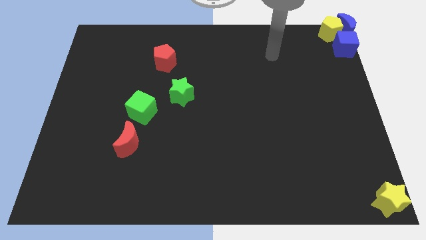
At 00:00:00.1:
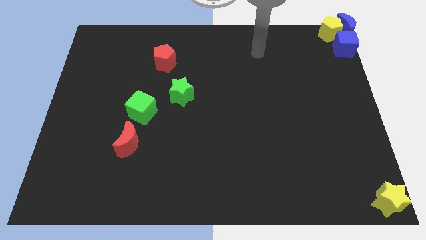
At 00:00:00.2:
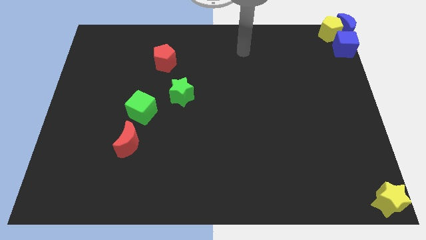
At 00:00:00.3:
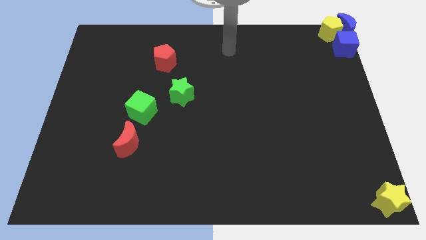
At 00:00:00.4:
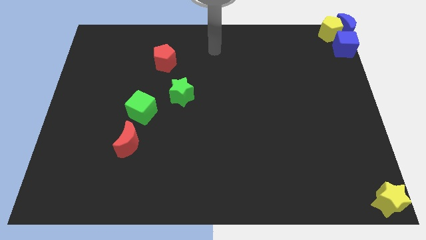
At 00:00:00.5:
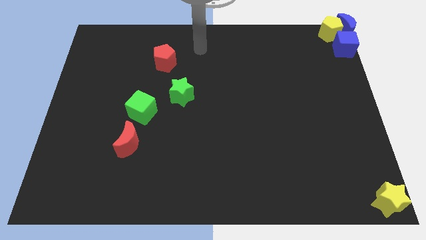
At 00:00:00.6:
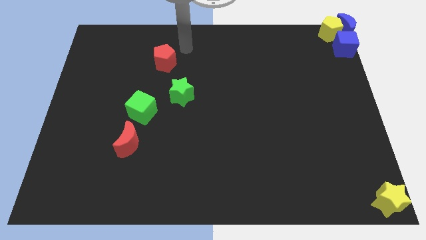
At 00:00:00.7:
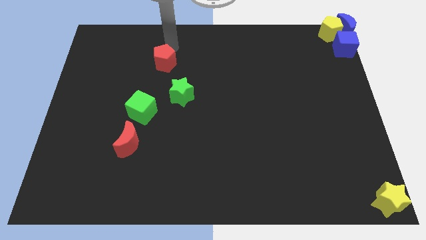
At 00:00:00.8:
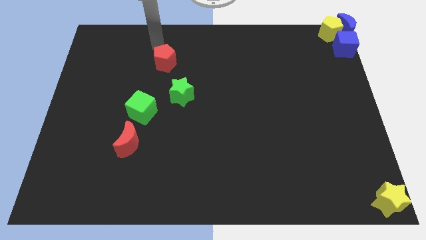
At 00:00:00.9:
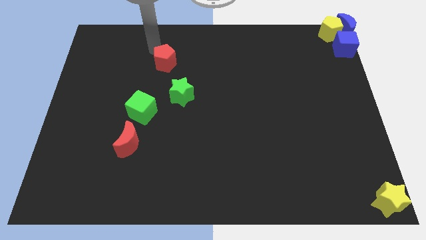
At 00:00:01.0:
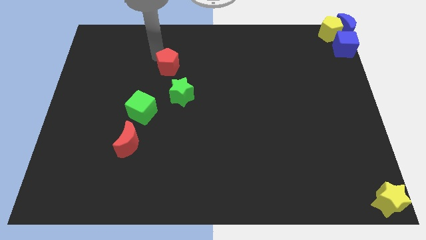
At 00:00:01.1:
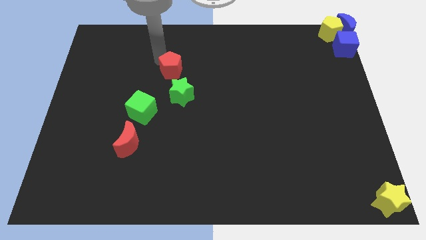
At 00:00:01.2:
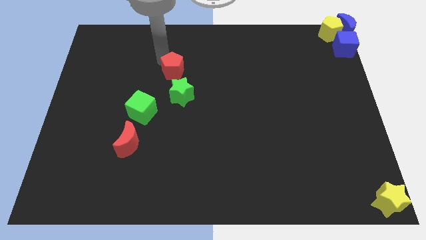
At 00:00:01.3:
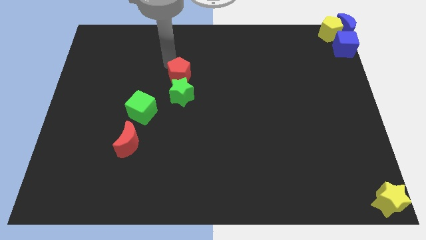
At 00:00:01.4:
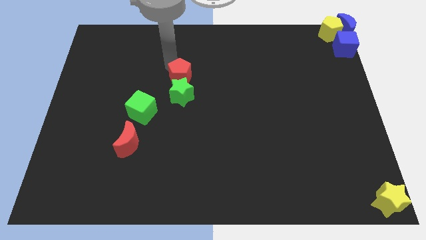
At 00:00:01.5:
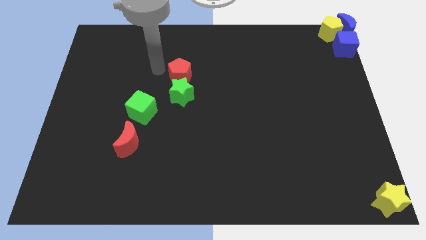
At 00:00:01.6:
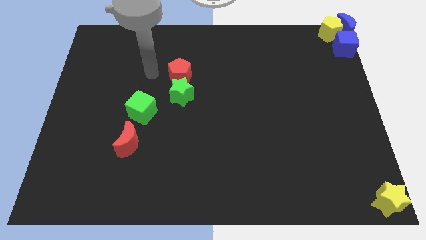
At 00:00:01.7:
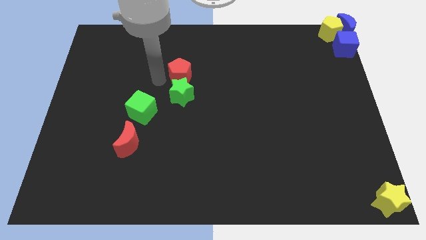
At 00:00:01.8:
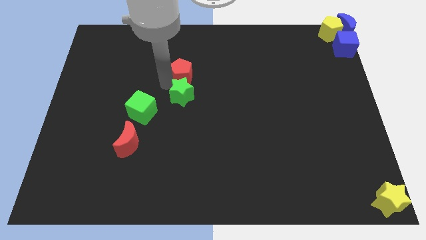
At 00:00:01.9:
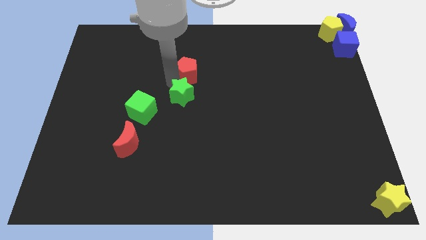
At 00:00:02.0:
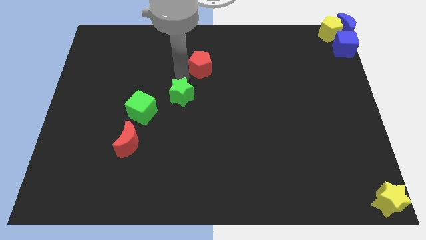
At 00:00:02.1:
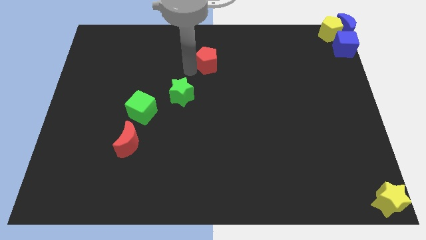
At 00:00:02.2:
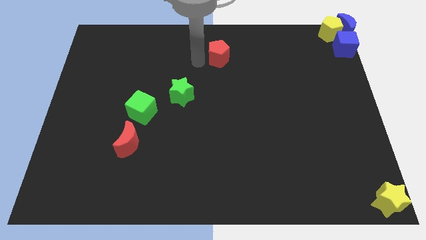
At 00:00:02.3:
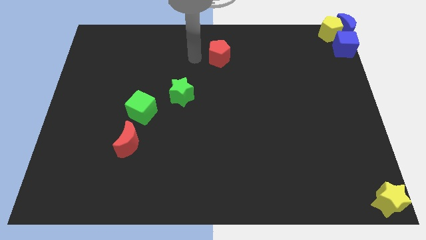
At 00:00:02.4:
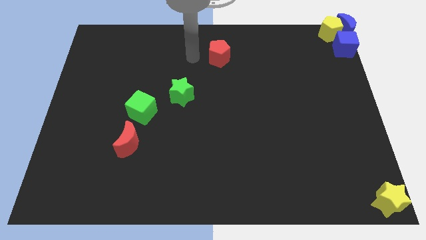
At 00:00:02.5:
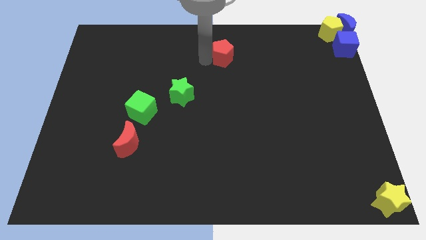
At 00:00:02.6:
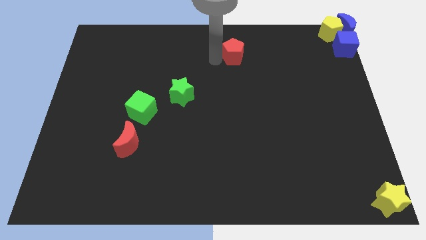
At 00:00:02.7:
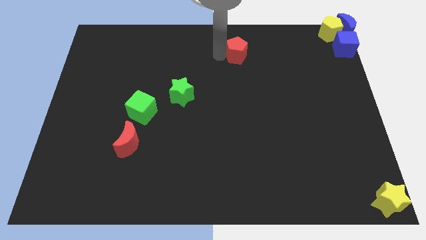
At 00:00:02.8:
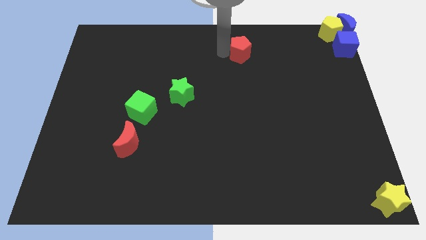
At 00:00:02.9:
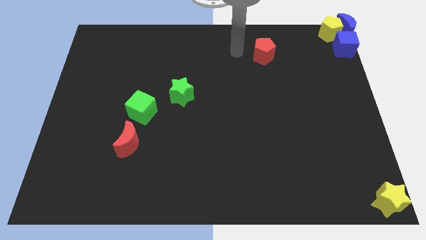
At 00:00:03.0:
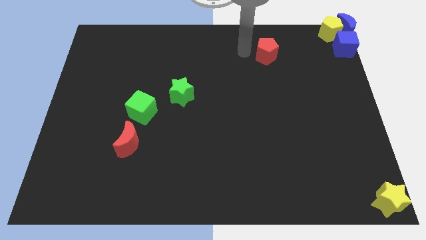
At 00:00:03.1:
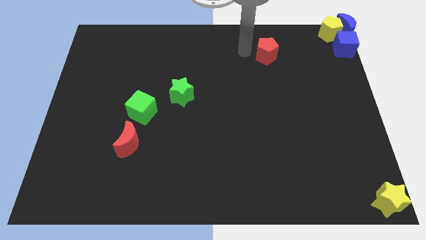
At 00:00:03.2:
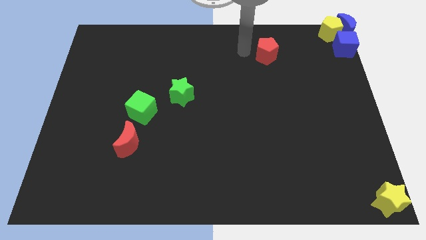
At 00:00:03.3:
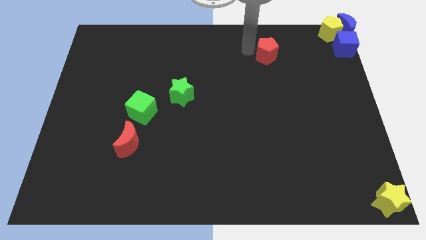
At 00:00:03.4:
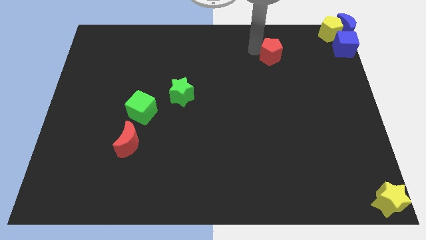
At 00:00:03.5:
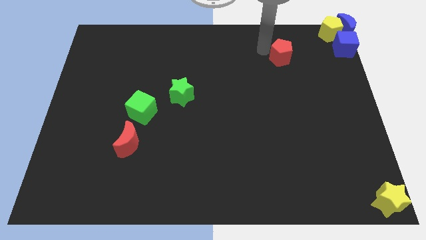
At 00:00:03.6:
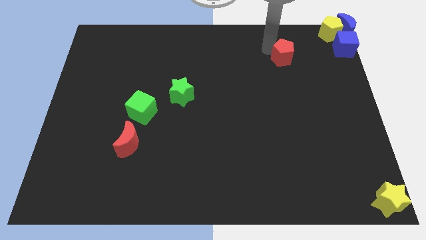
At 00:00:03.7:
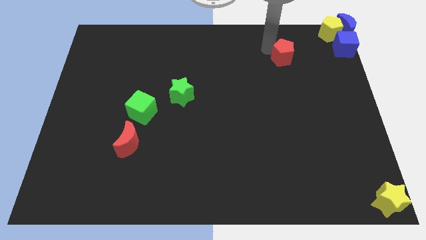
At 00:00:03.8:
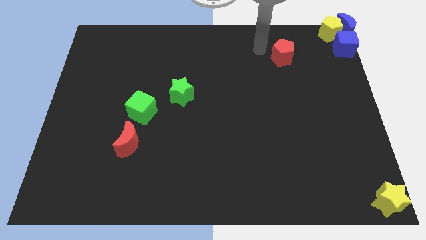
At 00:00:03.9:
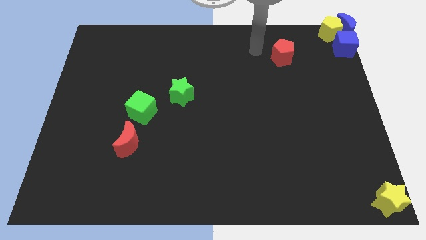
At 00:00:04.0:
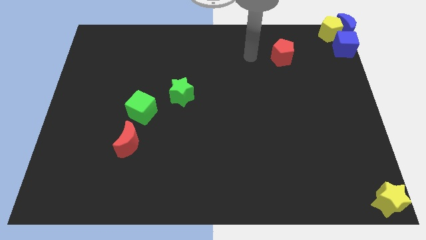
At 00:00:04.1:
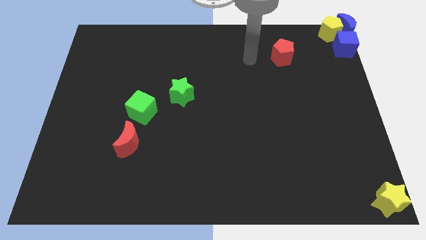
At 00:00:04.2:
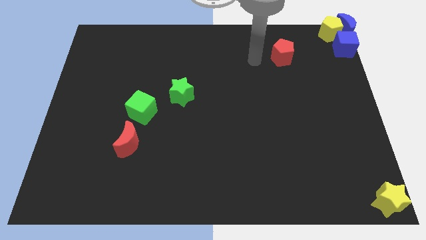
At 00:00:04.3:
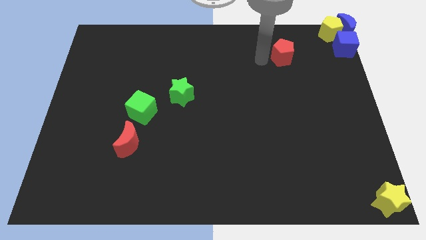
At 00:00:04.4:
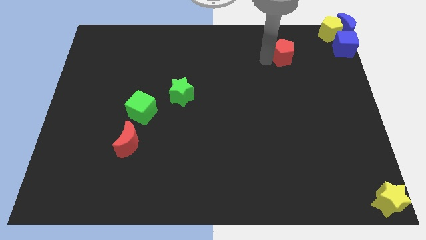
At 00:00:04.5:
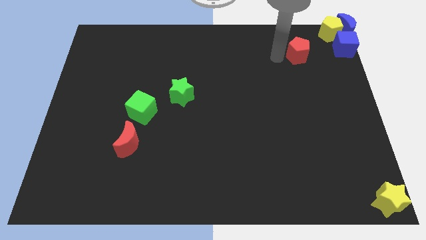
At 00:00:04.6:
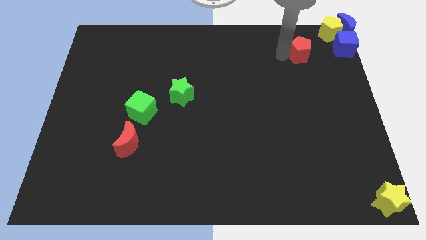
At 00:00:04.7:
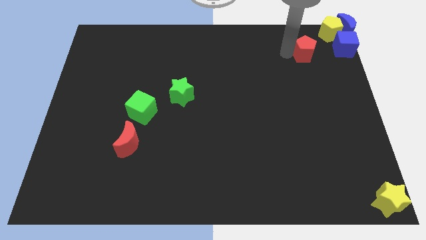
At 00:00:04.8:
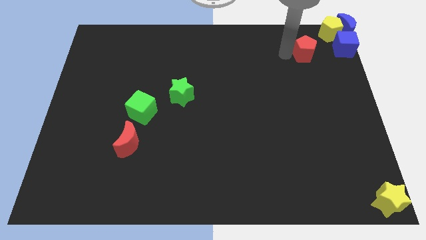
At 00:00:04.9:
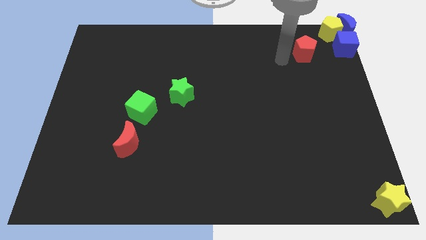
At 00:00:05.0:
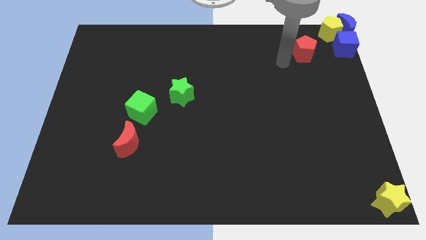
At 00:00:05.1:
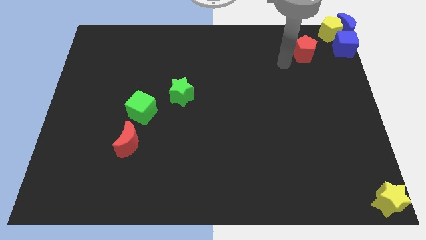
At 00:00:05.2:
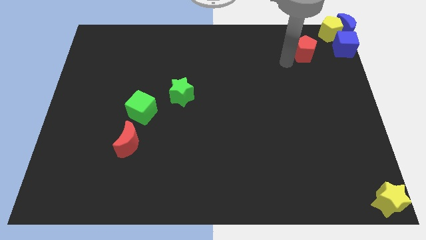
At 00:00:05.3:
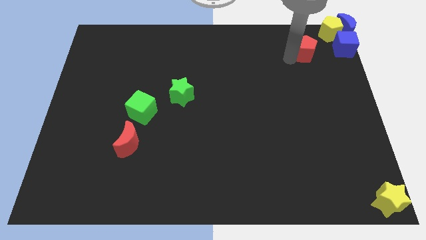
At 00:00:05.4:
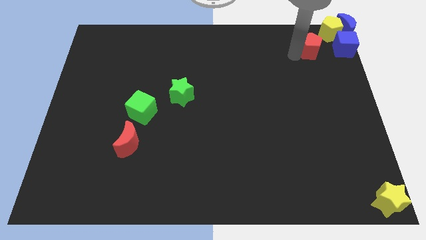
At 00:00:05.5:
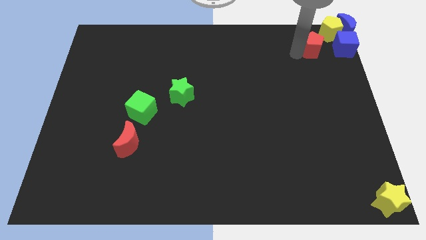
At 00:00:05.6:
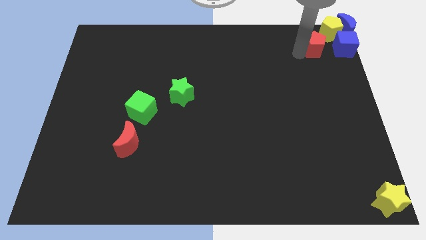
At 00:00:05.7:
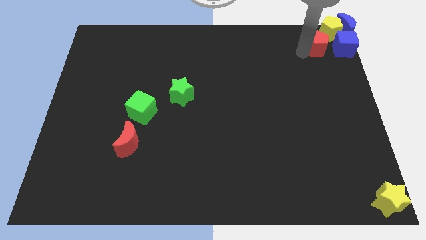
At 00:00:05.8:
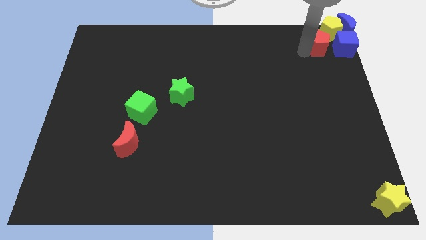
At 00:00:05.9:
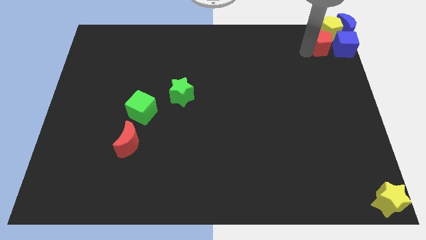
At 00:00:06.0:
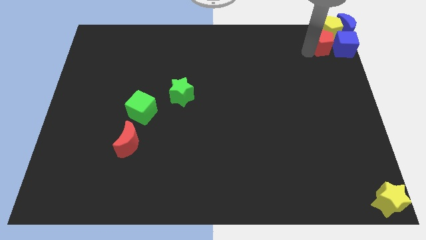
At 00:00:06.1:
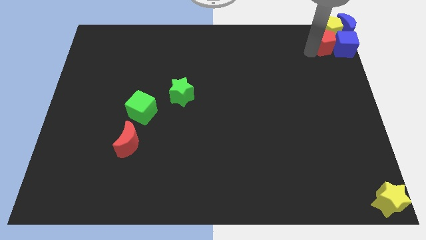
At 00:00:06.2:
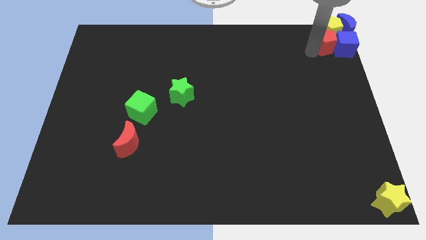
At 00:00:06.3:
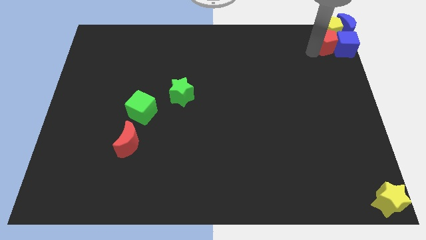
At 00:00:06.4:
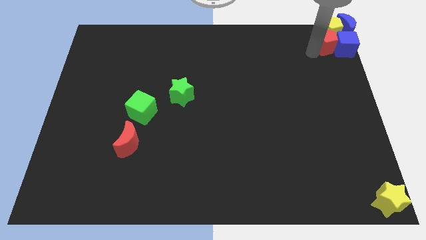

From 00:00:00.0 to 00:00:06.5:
push the red pentagon into the blue cube

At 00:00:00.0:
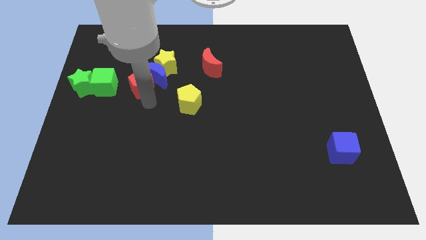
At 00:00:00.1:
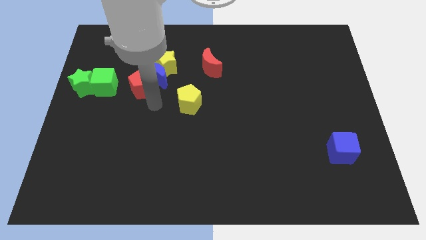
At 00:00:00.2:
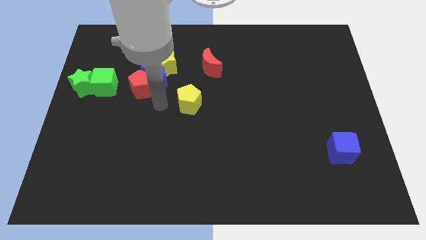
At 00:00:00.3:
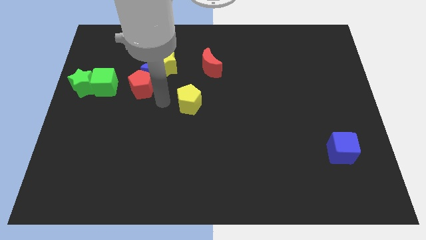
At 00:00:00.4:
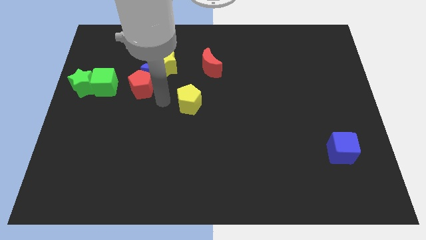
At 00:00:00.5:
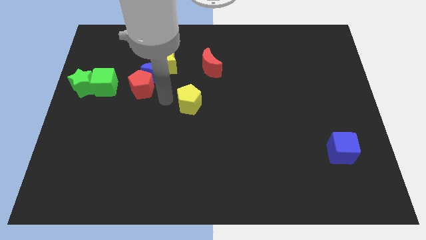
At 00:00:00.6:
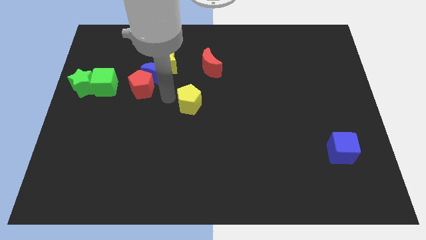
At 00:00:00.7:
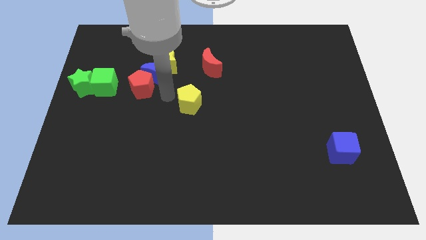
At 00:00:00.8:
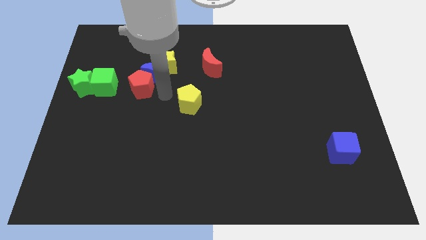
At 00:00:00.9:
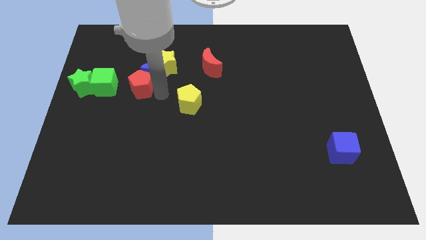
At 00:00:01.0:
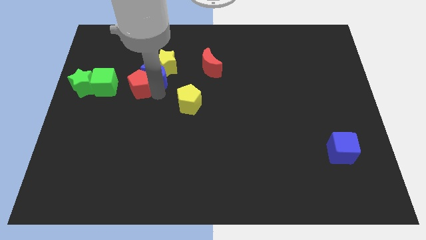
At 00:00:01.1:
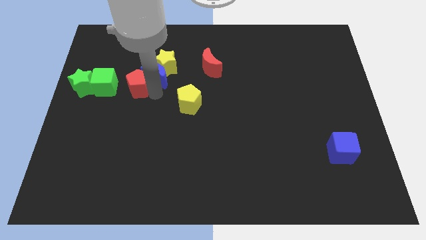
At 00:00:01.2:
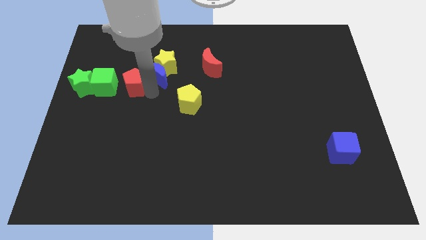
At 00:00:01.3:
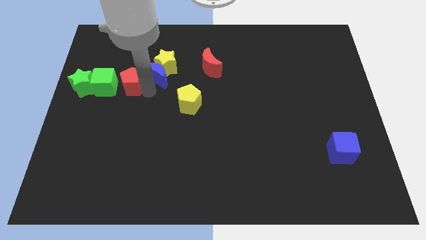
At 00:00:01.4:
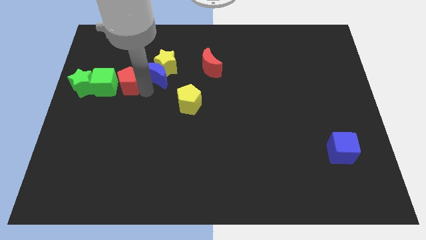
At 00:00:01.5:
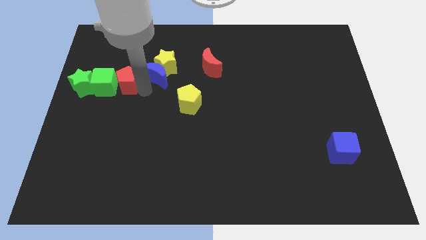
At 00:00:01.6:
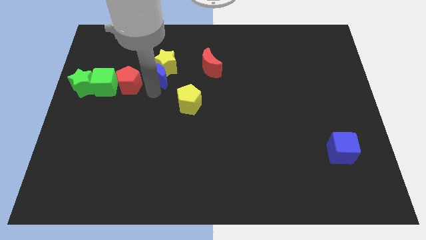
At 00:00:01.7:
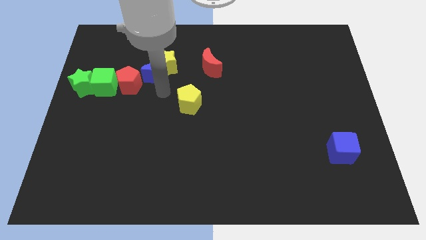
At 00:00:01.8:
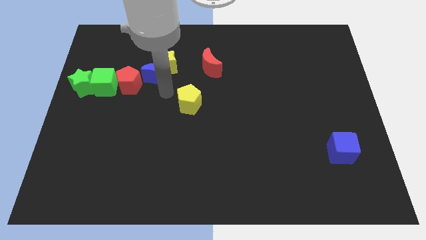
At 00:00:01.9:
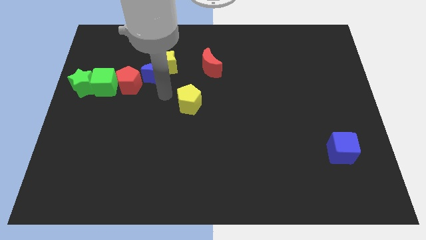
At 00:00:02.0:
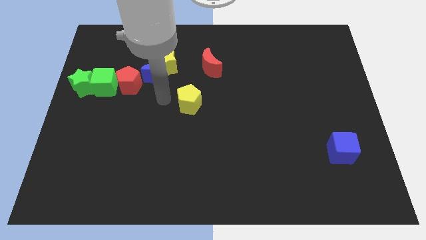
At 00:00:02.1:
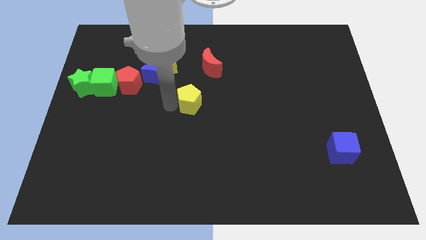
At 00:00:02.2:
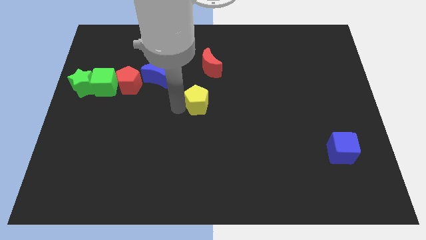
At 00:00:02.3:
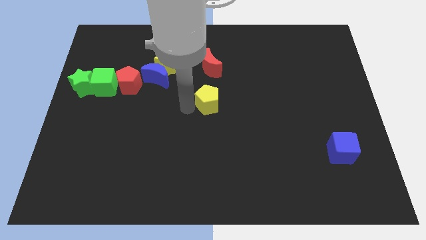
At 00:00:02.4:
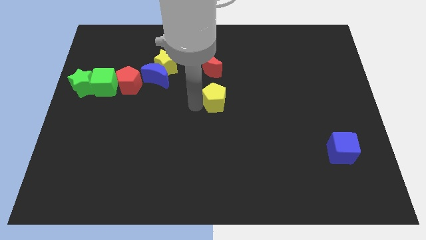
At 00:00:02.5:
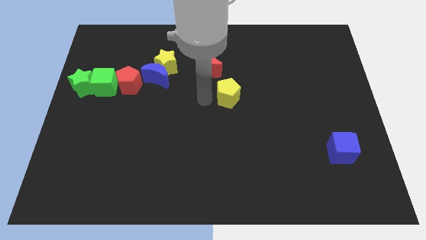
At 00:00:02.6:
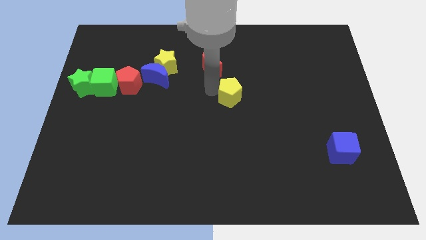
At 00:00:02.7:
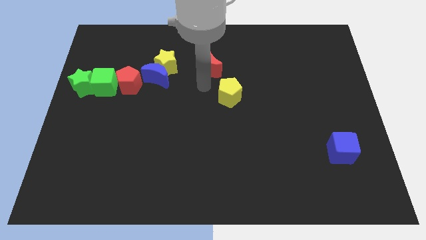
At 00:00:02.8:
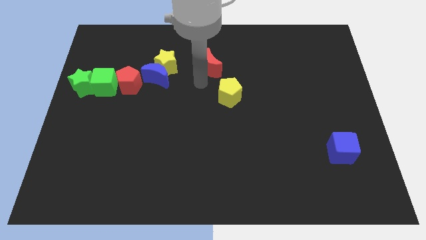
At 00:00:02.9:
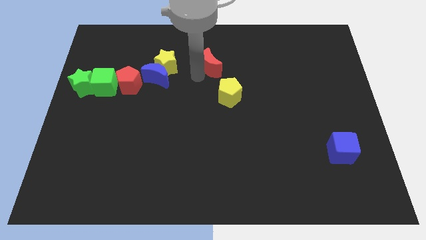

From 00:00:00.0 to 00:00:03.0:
push red pentagon into green cube
